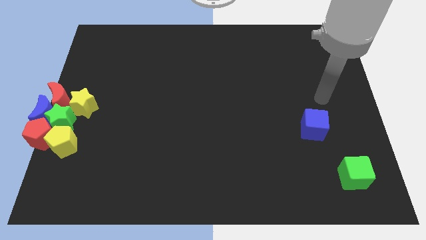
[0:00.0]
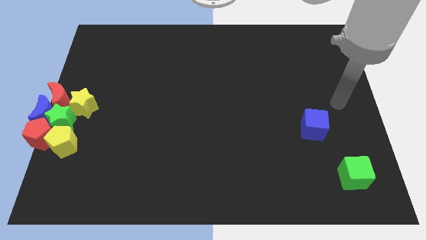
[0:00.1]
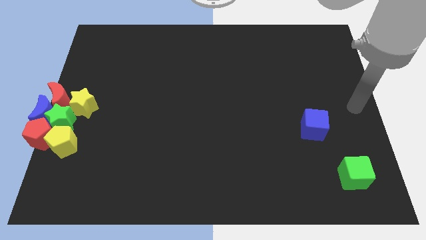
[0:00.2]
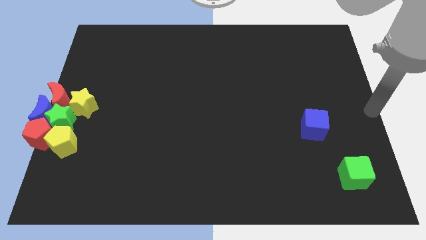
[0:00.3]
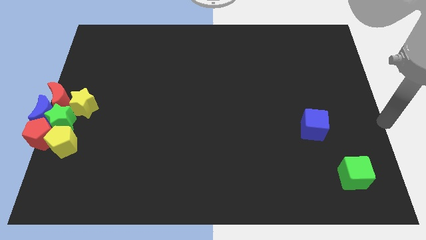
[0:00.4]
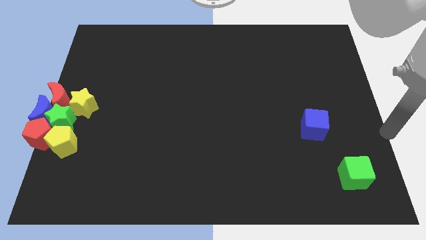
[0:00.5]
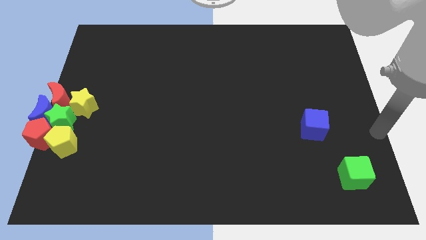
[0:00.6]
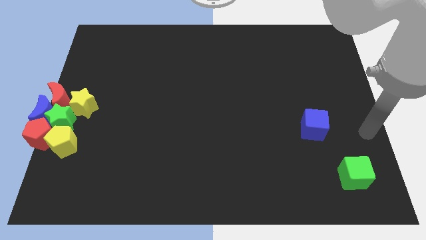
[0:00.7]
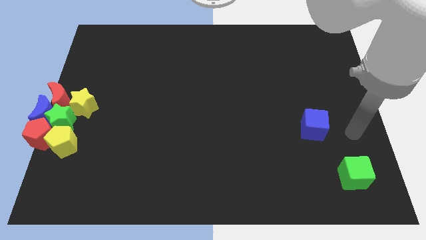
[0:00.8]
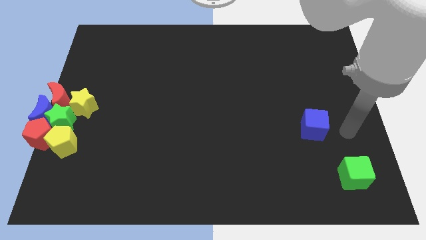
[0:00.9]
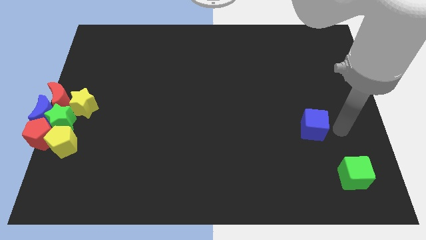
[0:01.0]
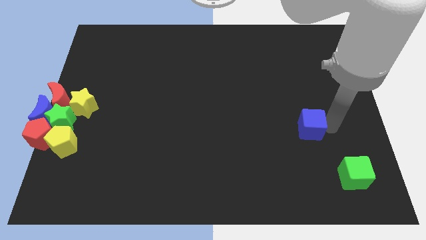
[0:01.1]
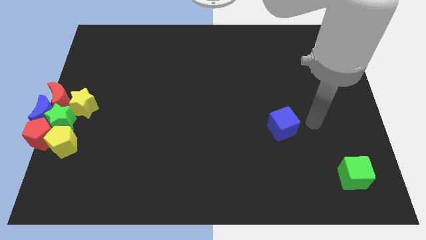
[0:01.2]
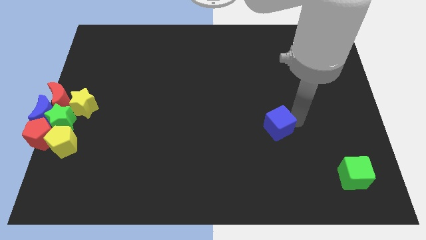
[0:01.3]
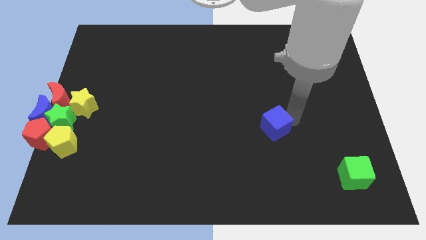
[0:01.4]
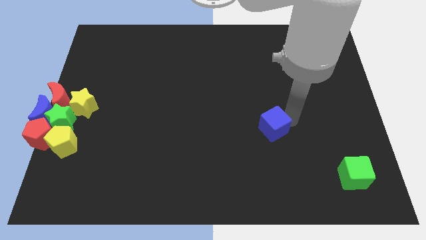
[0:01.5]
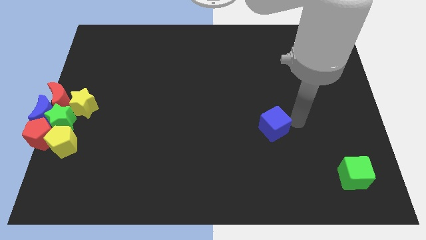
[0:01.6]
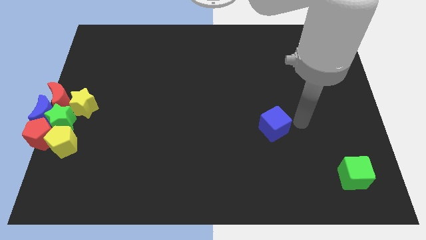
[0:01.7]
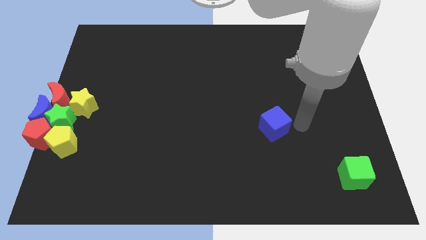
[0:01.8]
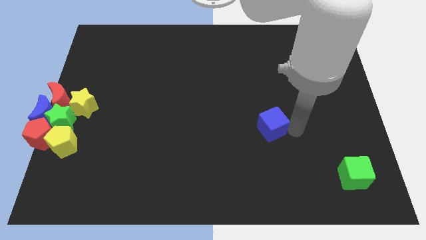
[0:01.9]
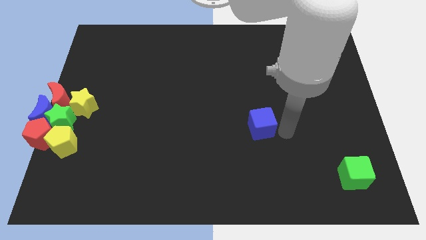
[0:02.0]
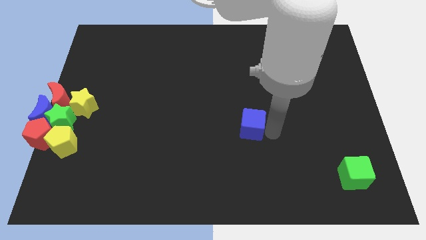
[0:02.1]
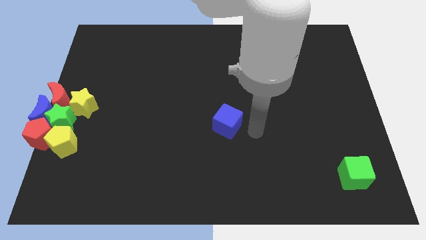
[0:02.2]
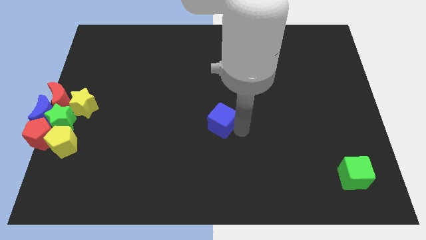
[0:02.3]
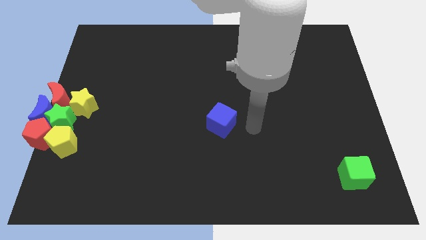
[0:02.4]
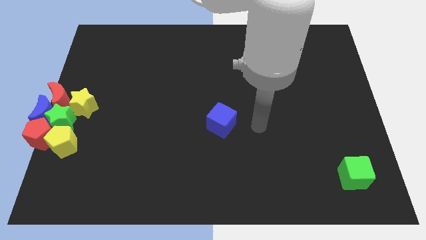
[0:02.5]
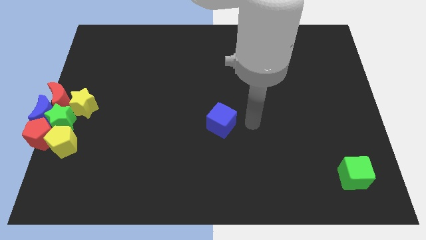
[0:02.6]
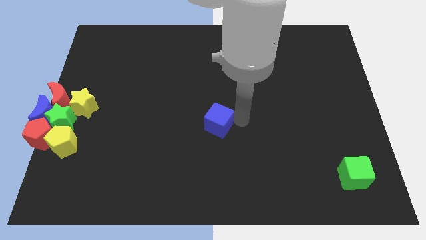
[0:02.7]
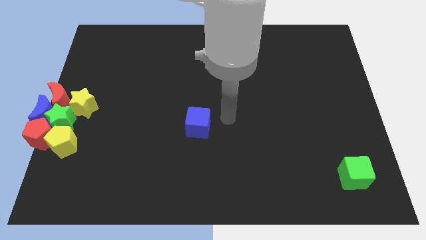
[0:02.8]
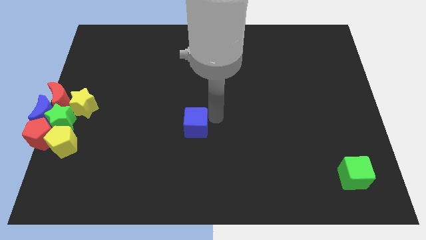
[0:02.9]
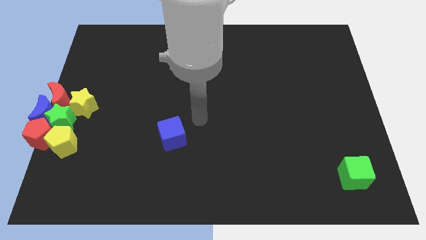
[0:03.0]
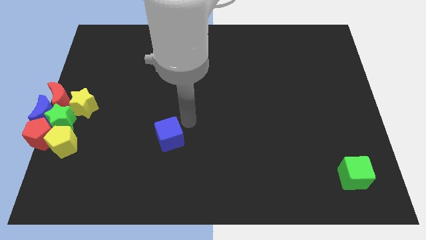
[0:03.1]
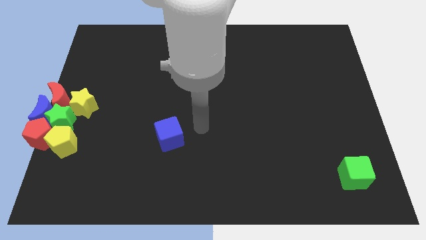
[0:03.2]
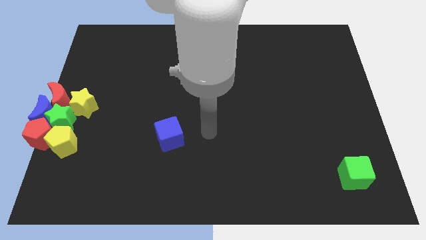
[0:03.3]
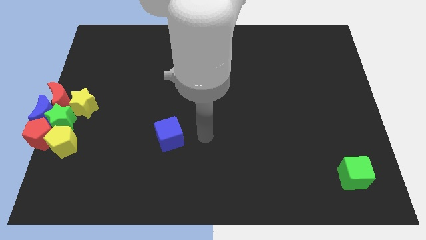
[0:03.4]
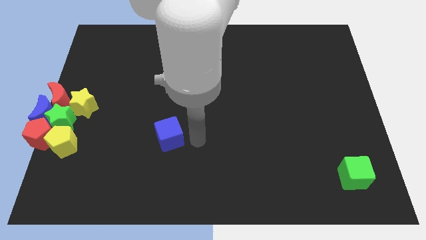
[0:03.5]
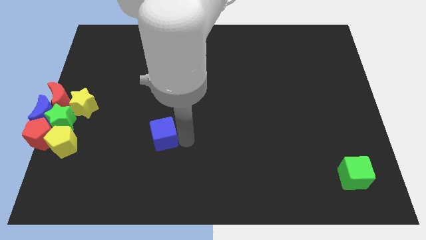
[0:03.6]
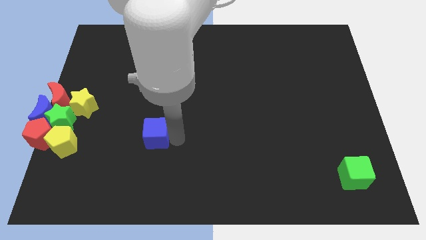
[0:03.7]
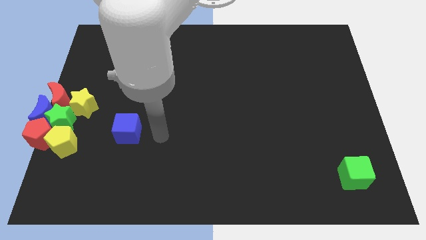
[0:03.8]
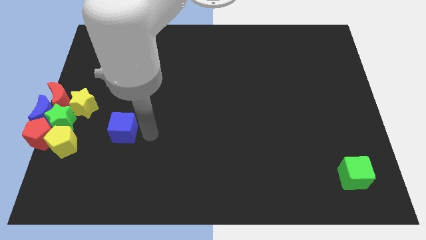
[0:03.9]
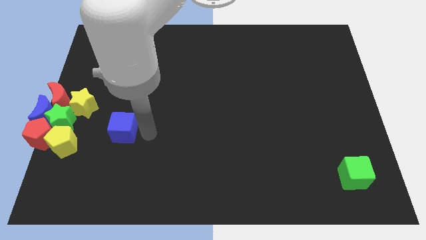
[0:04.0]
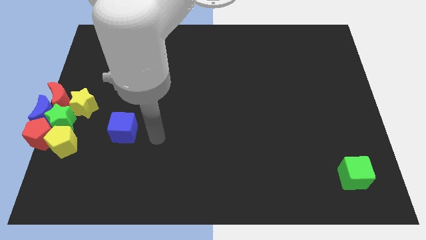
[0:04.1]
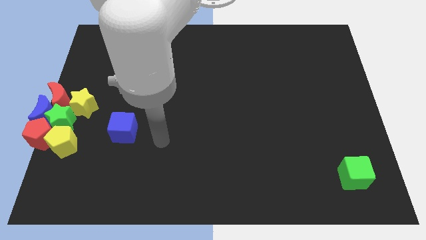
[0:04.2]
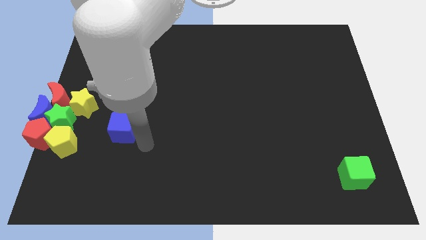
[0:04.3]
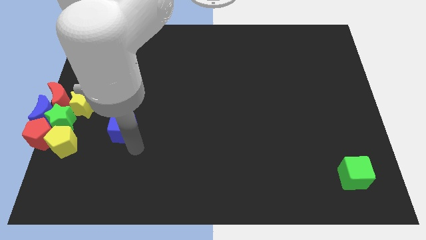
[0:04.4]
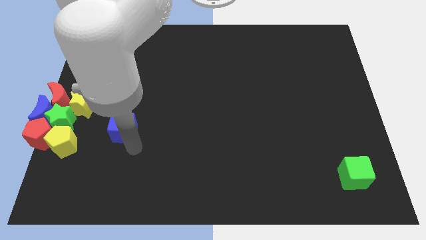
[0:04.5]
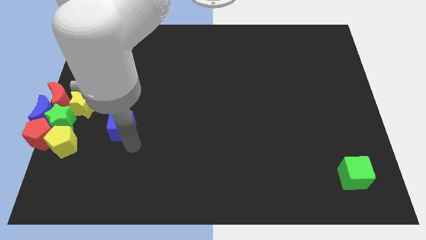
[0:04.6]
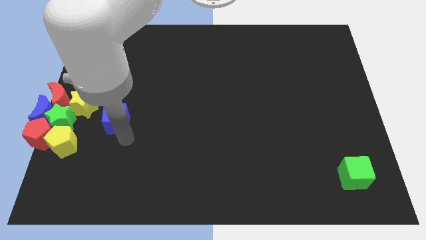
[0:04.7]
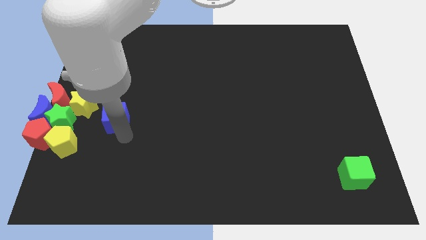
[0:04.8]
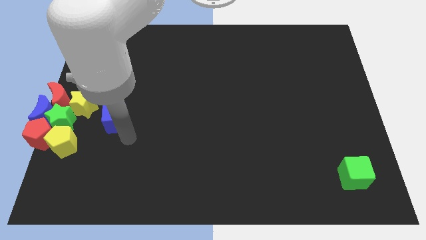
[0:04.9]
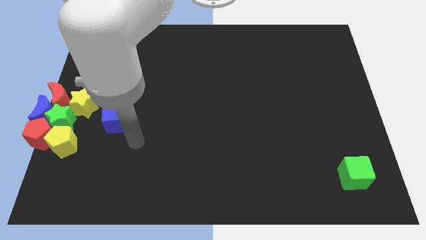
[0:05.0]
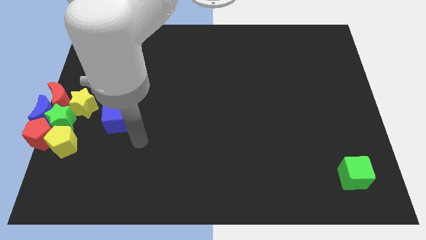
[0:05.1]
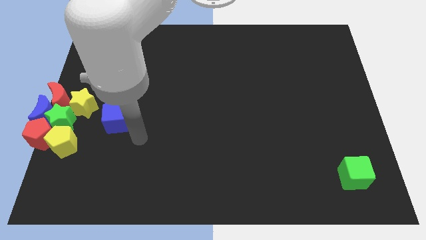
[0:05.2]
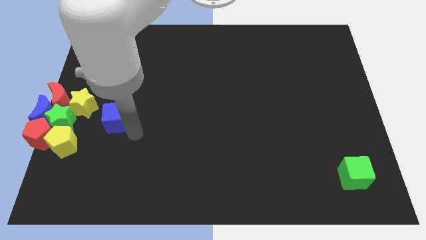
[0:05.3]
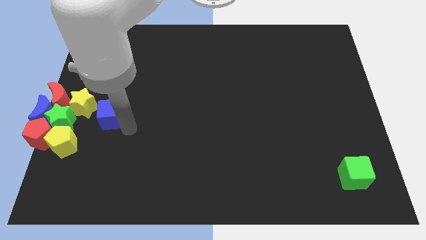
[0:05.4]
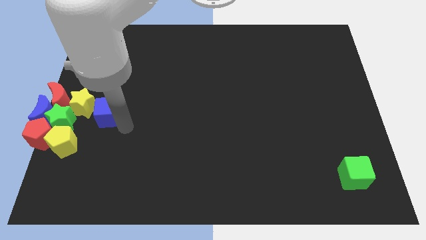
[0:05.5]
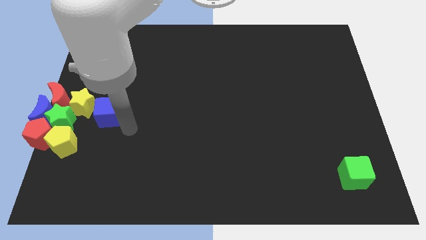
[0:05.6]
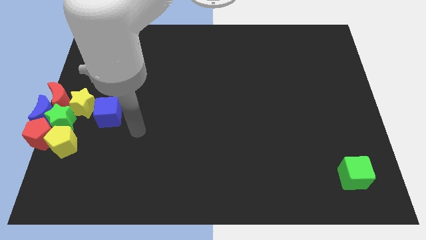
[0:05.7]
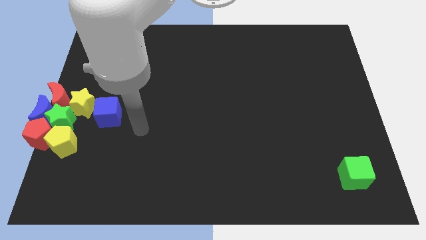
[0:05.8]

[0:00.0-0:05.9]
slide blue cube to the right of the yellow star

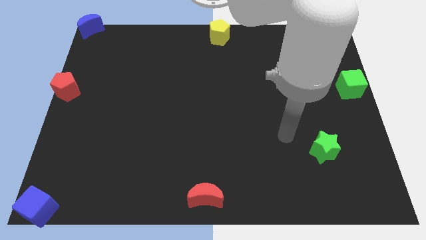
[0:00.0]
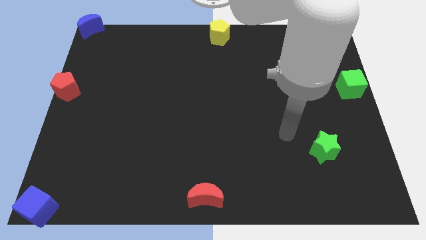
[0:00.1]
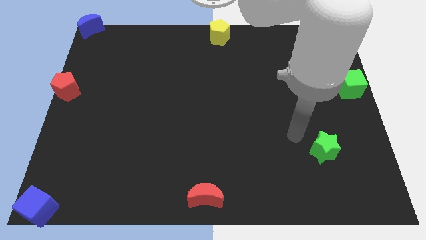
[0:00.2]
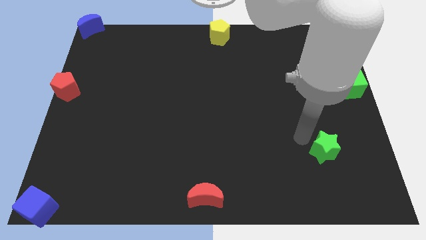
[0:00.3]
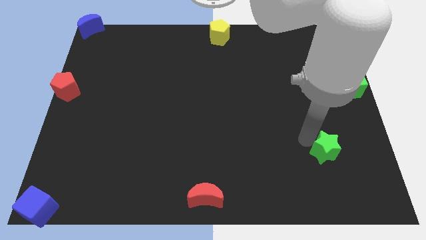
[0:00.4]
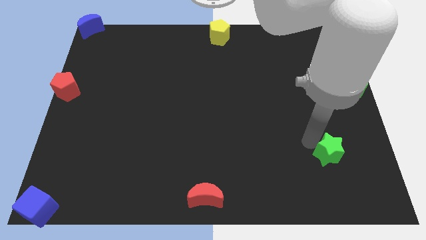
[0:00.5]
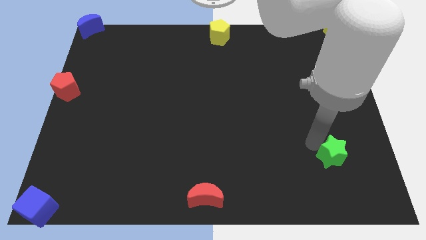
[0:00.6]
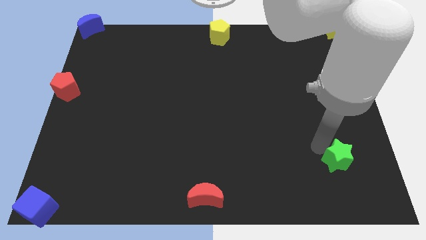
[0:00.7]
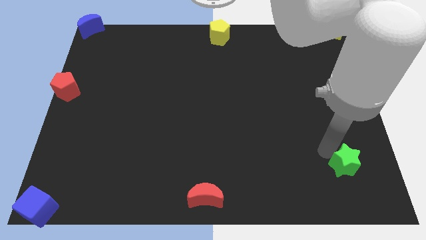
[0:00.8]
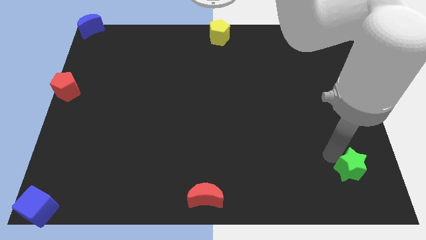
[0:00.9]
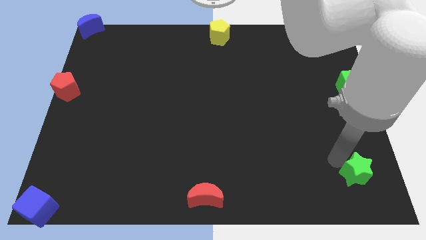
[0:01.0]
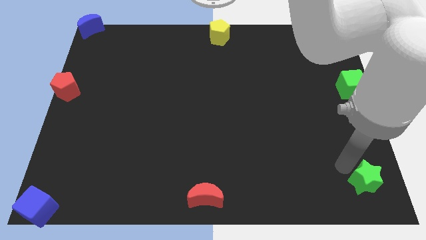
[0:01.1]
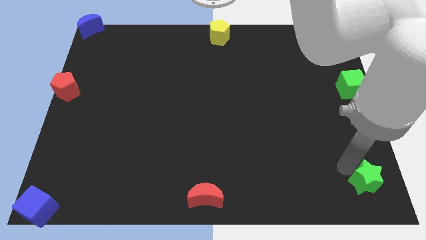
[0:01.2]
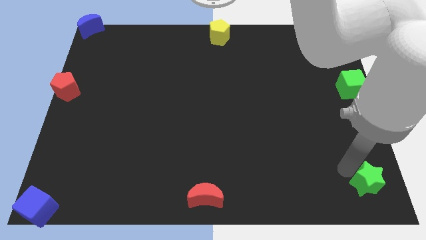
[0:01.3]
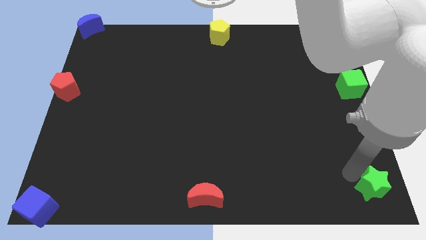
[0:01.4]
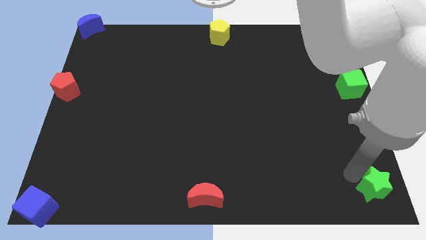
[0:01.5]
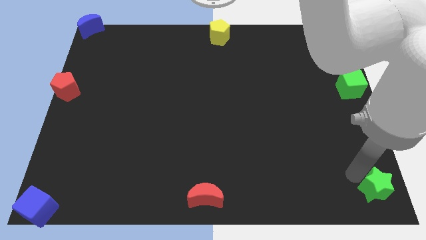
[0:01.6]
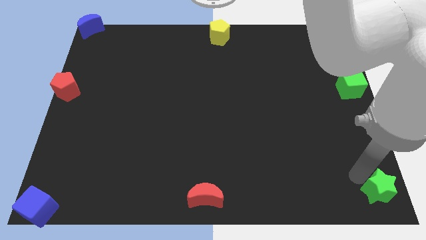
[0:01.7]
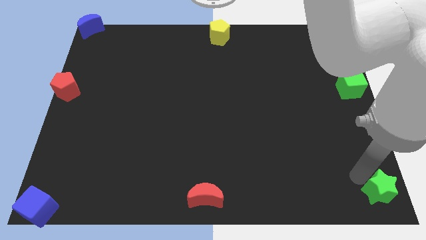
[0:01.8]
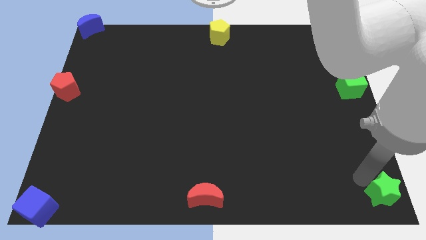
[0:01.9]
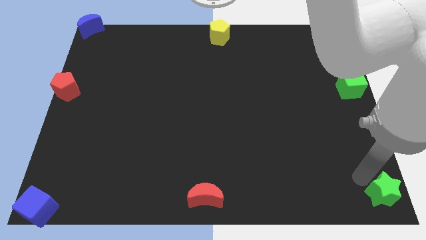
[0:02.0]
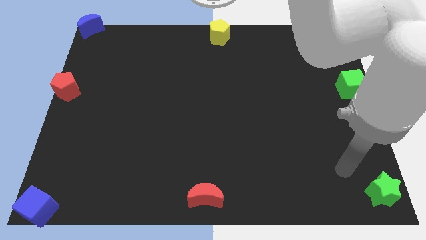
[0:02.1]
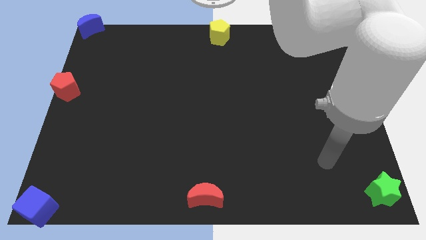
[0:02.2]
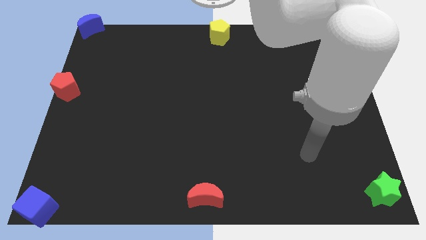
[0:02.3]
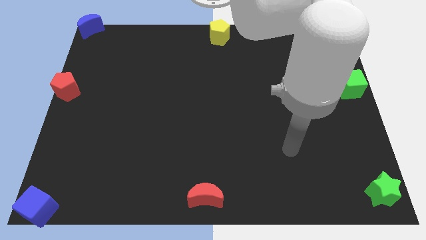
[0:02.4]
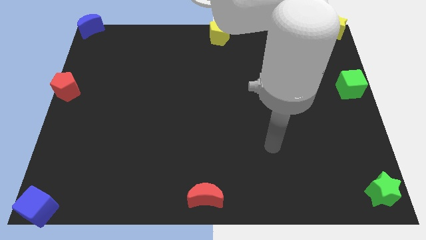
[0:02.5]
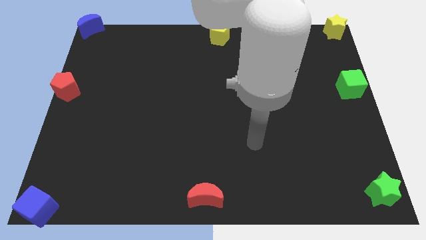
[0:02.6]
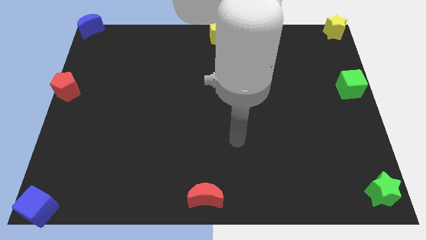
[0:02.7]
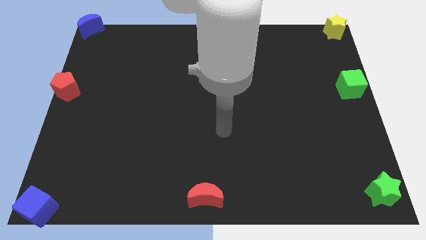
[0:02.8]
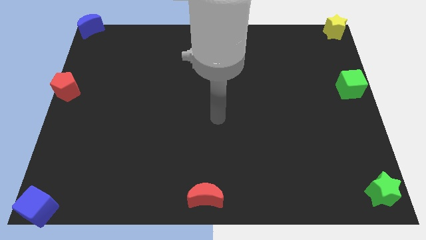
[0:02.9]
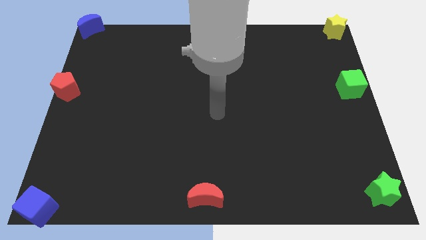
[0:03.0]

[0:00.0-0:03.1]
place the green star towards the bottom right corner

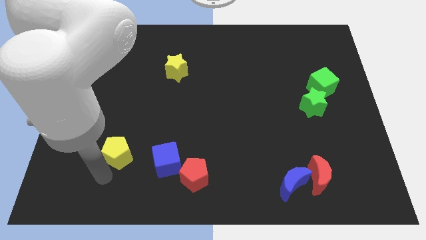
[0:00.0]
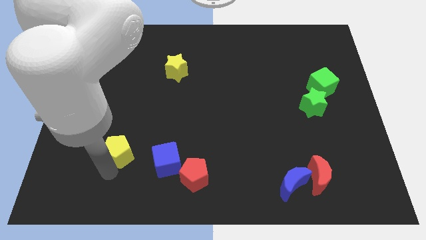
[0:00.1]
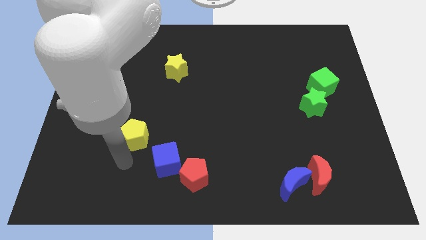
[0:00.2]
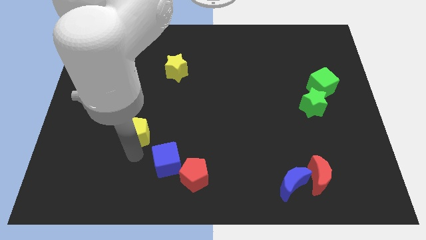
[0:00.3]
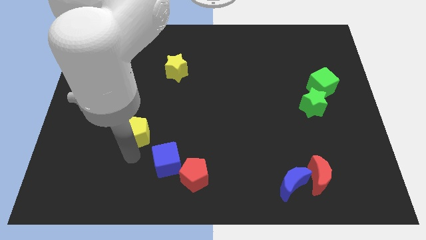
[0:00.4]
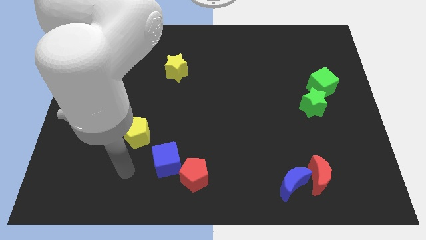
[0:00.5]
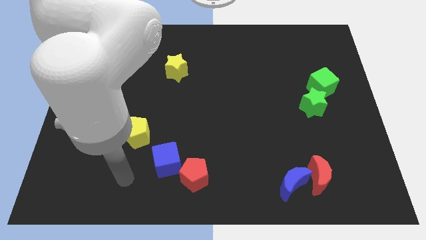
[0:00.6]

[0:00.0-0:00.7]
move the yellow pentagon to the top of the board
